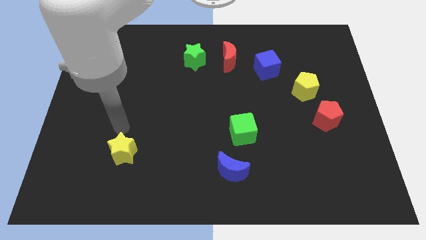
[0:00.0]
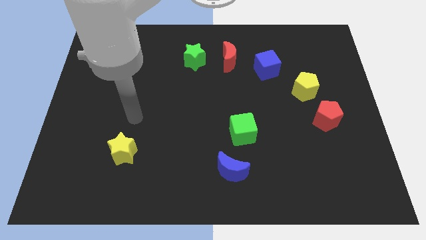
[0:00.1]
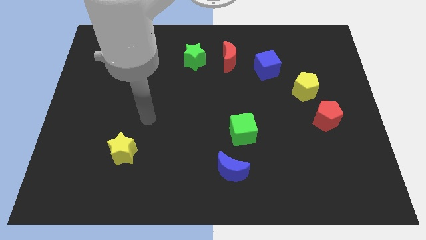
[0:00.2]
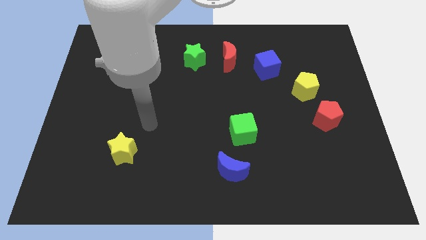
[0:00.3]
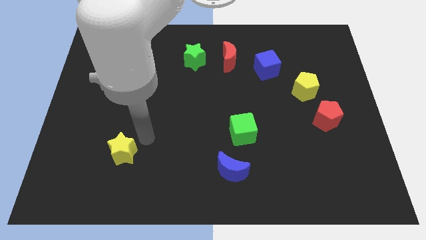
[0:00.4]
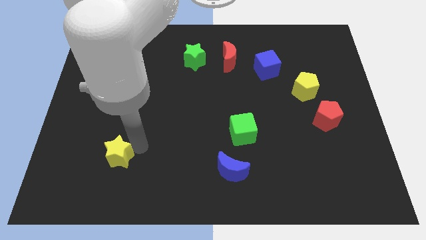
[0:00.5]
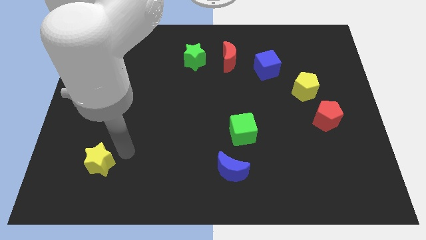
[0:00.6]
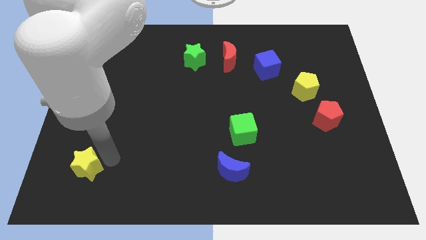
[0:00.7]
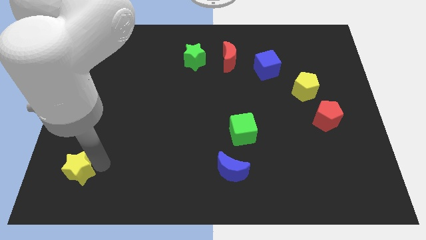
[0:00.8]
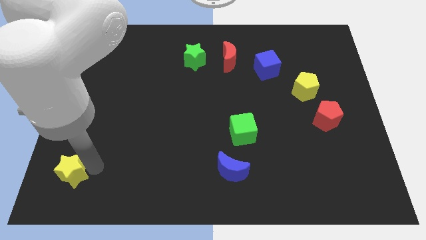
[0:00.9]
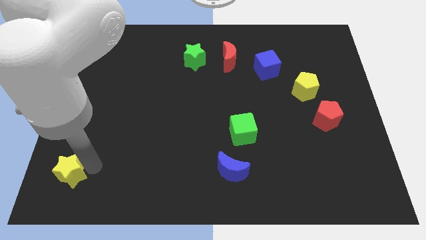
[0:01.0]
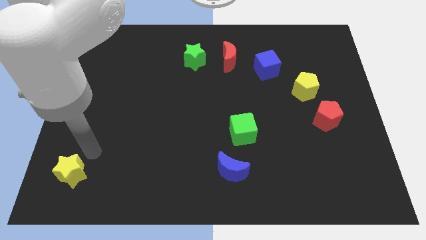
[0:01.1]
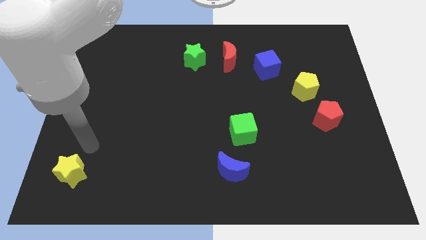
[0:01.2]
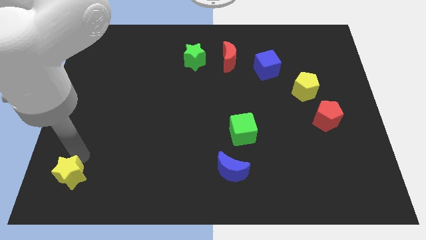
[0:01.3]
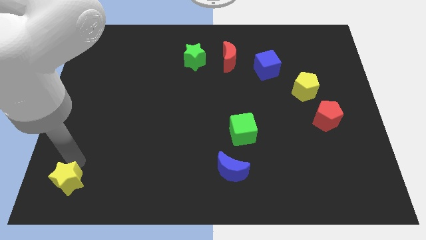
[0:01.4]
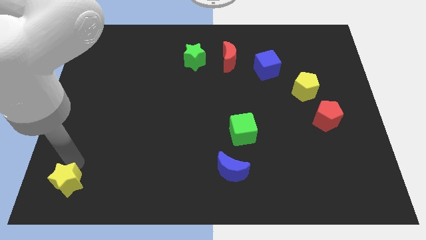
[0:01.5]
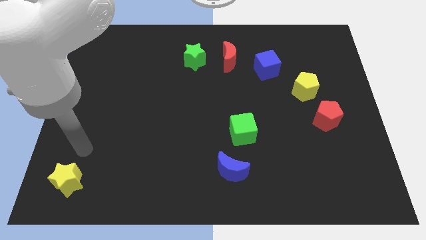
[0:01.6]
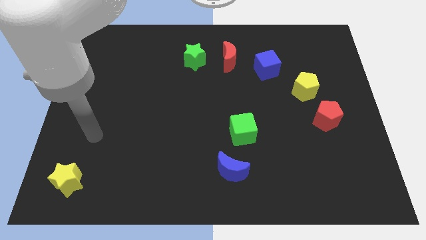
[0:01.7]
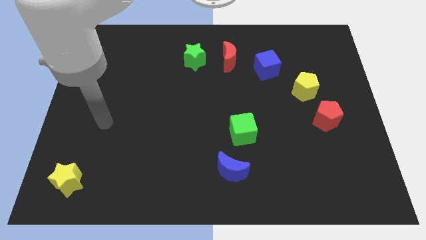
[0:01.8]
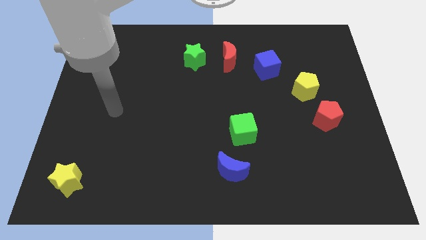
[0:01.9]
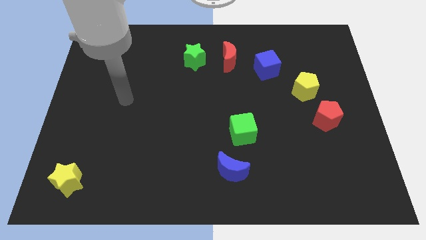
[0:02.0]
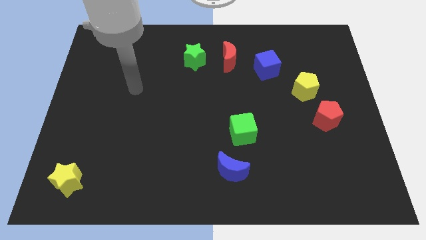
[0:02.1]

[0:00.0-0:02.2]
push yellow star to the left bottom

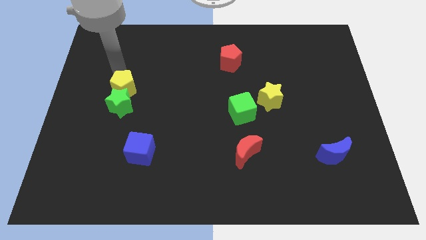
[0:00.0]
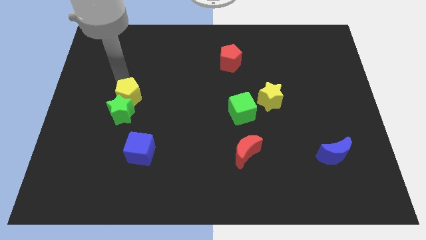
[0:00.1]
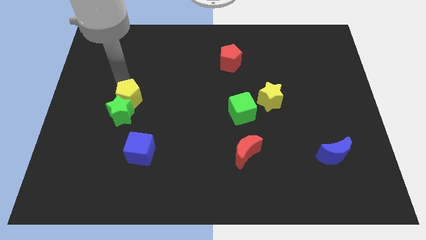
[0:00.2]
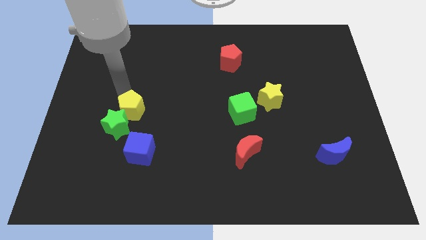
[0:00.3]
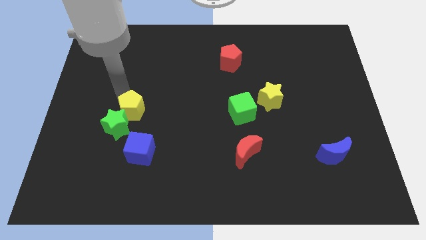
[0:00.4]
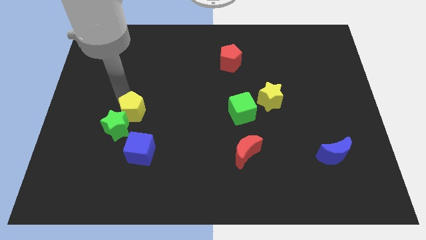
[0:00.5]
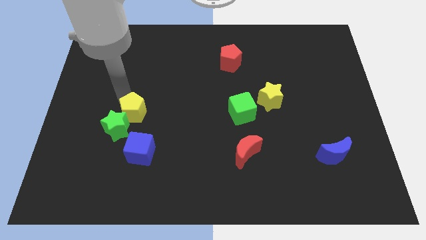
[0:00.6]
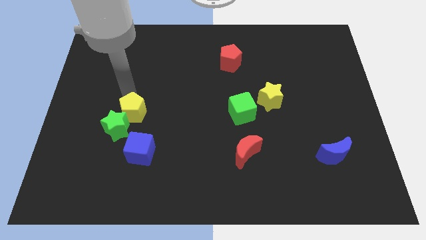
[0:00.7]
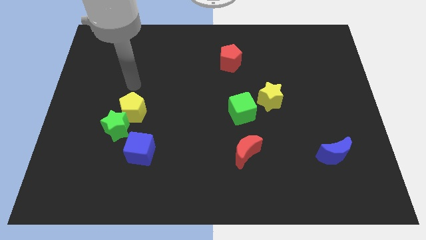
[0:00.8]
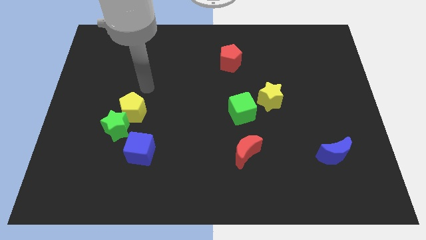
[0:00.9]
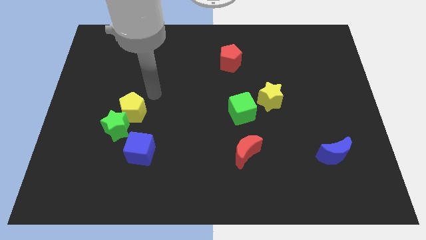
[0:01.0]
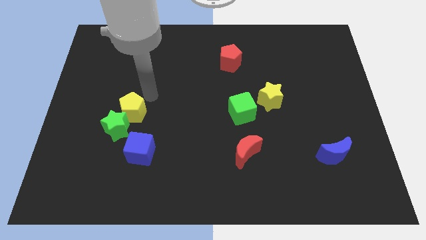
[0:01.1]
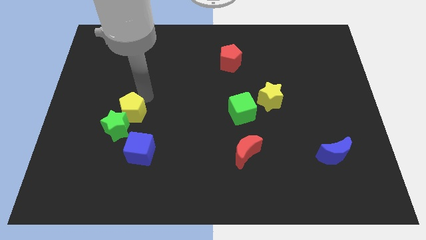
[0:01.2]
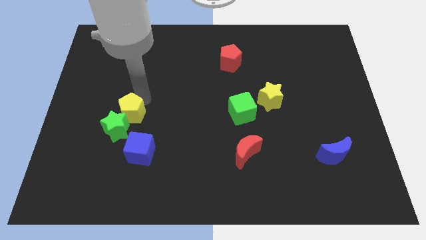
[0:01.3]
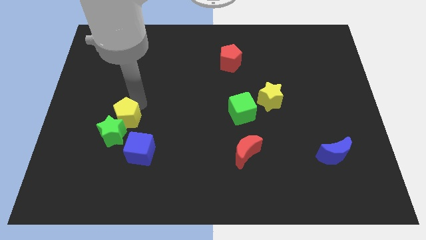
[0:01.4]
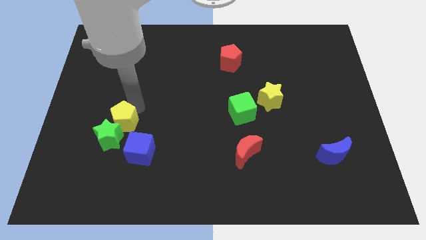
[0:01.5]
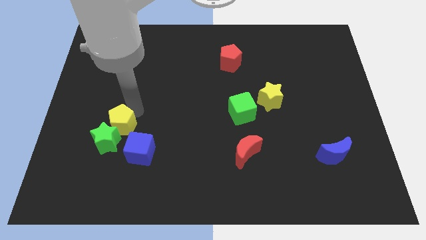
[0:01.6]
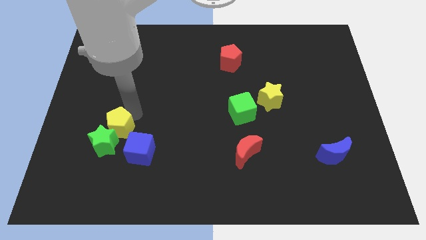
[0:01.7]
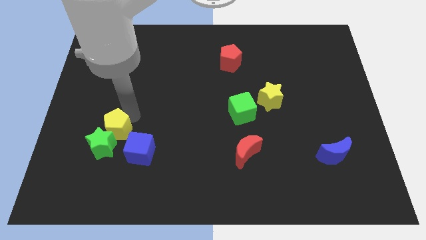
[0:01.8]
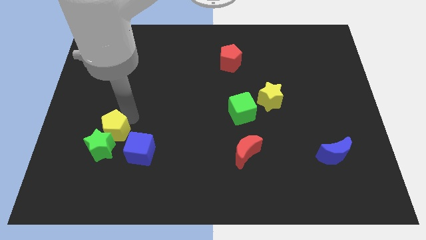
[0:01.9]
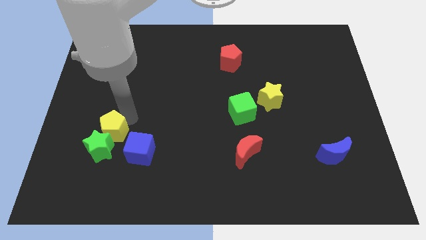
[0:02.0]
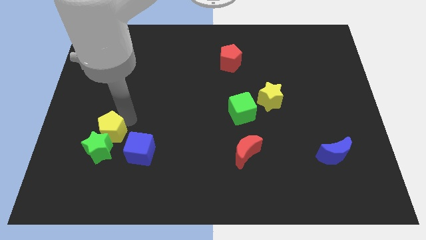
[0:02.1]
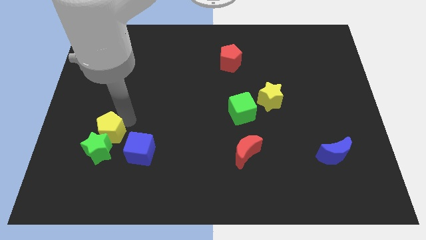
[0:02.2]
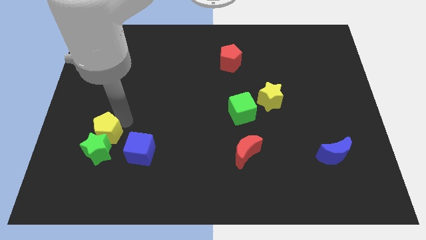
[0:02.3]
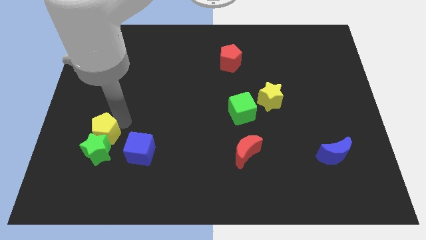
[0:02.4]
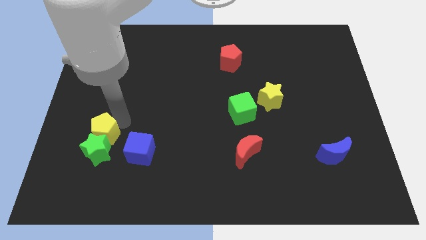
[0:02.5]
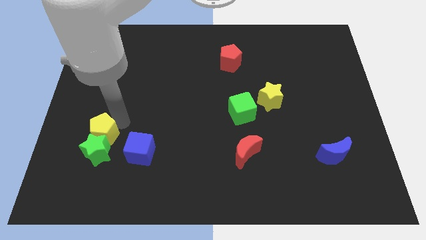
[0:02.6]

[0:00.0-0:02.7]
push the yellow pentagon and the green star together to the left of the blue cube

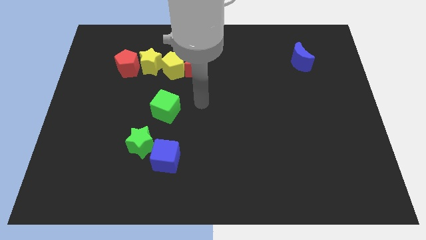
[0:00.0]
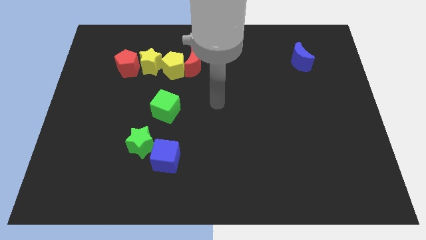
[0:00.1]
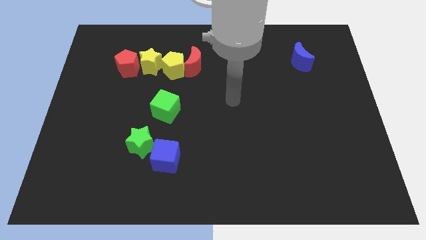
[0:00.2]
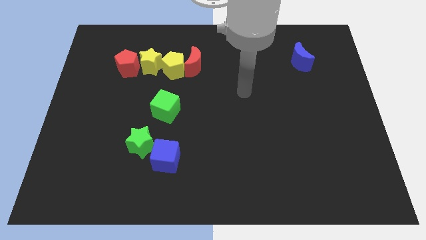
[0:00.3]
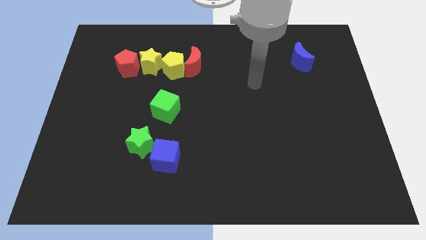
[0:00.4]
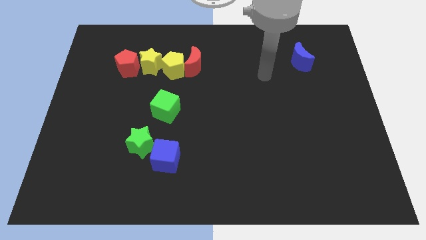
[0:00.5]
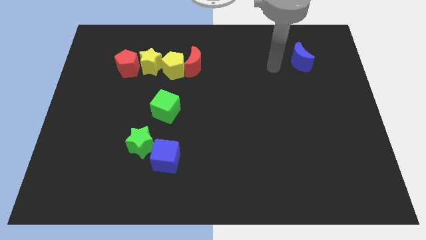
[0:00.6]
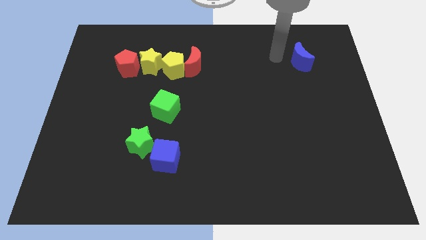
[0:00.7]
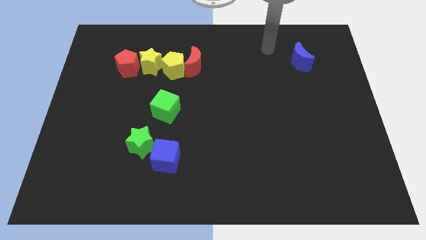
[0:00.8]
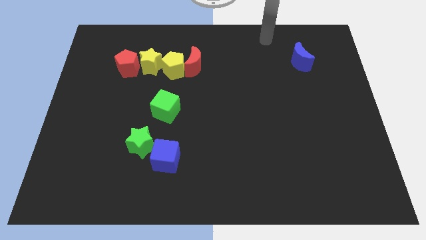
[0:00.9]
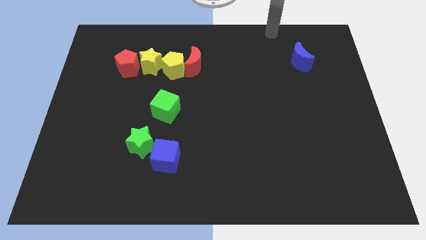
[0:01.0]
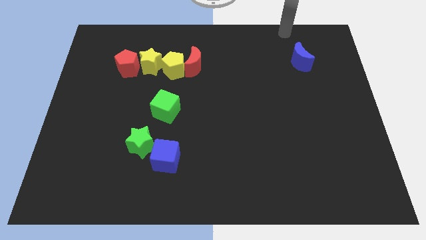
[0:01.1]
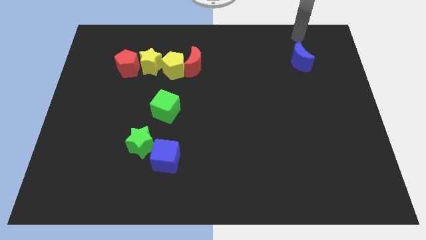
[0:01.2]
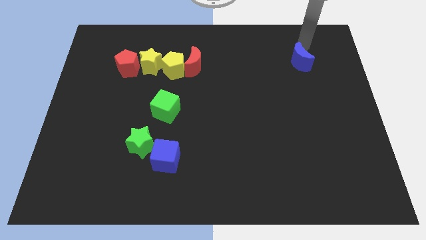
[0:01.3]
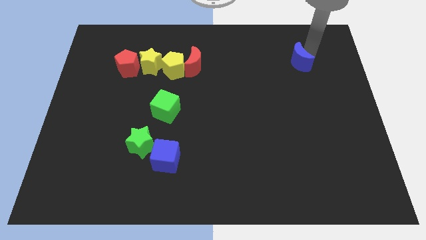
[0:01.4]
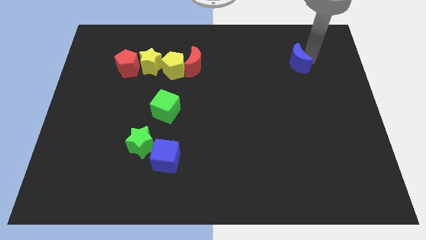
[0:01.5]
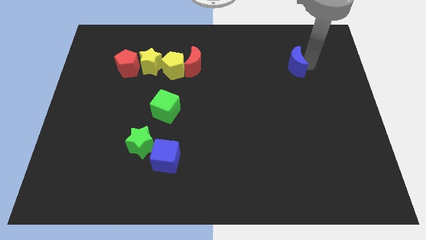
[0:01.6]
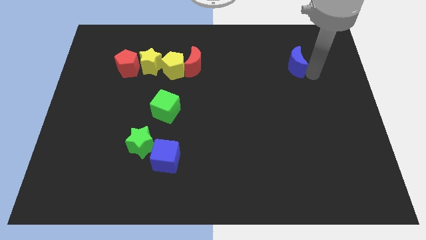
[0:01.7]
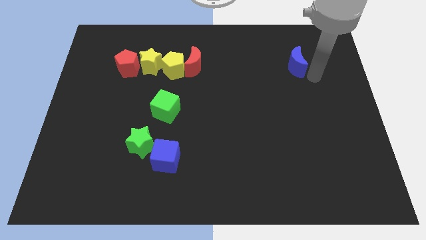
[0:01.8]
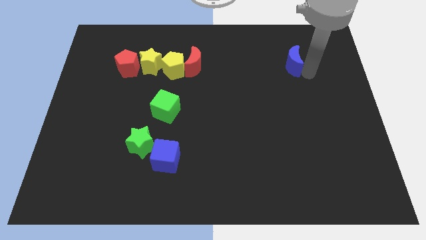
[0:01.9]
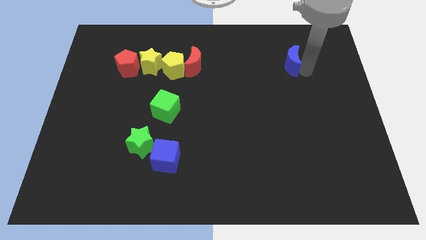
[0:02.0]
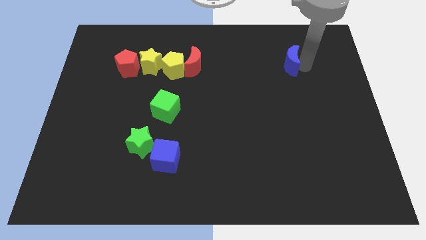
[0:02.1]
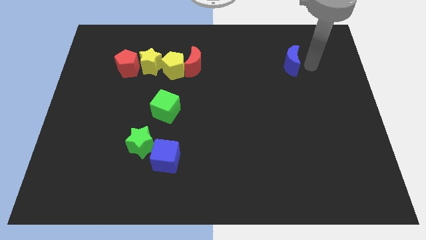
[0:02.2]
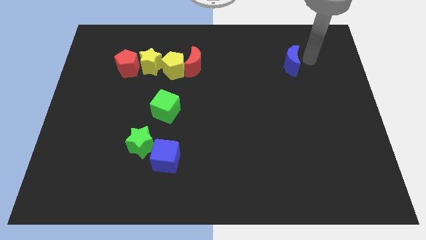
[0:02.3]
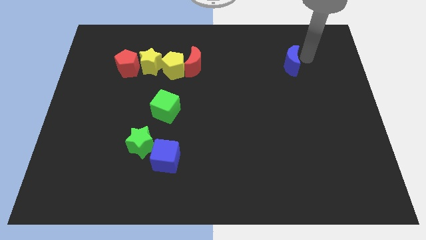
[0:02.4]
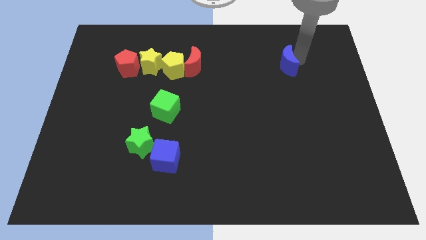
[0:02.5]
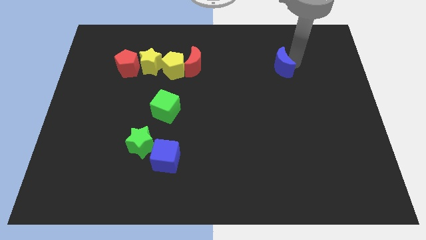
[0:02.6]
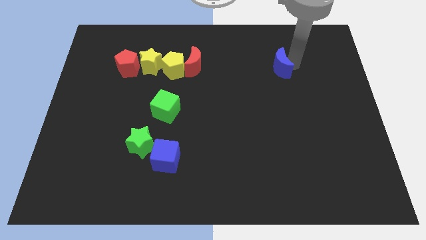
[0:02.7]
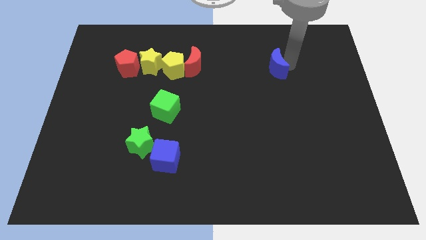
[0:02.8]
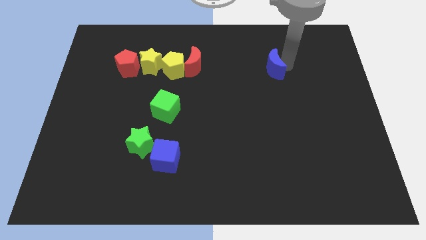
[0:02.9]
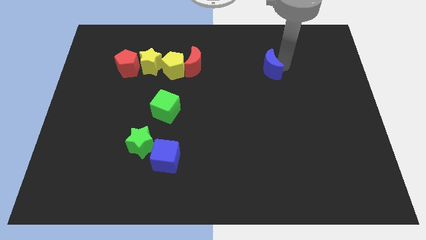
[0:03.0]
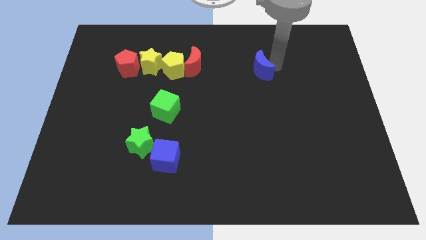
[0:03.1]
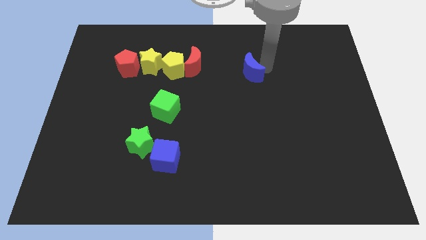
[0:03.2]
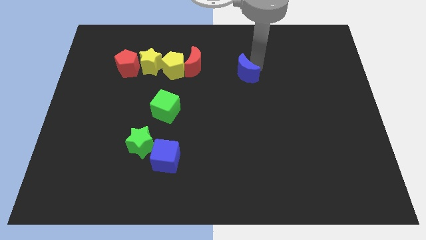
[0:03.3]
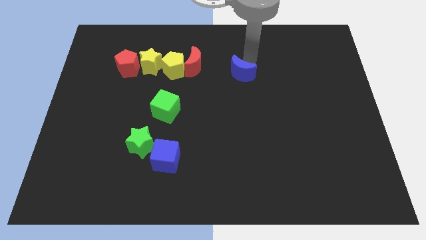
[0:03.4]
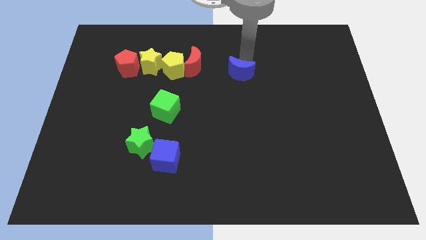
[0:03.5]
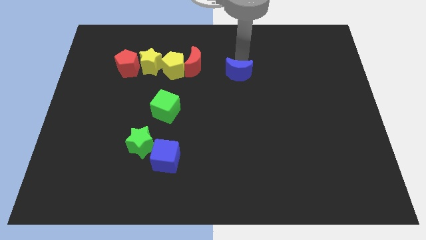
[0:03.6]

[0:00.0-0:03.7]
push the blue crescent towards the red crescent

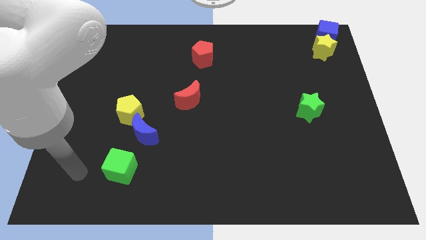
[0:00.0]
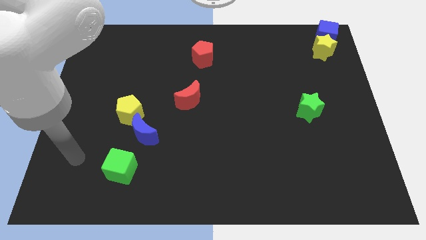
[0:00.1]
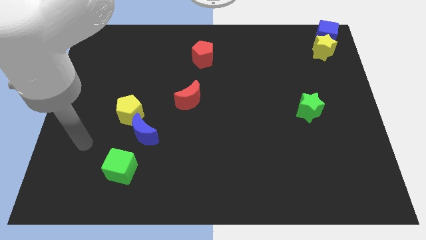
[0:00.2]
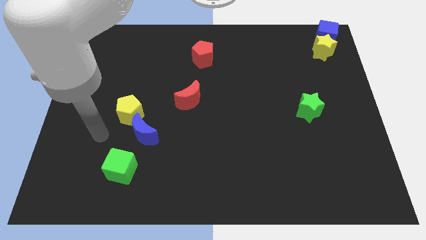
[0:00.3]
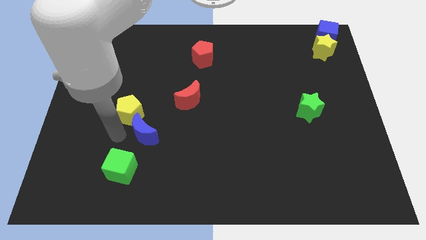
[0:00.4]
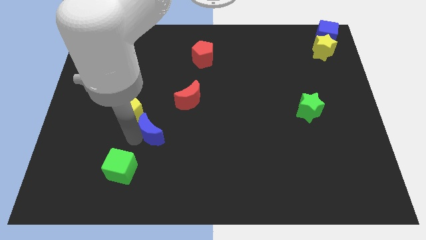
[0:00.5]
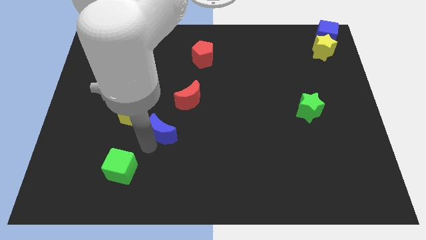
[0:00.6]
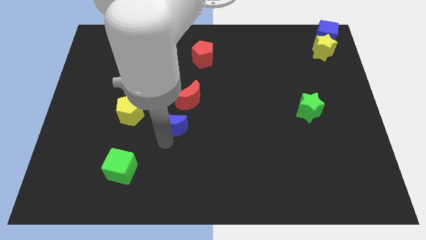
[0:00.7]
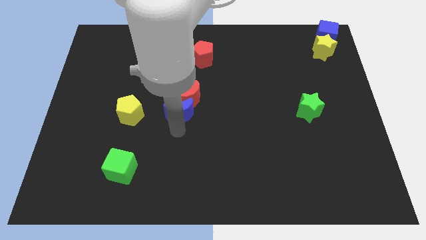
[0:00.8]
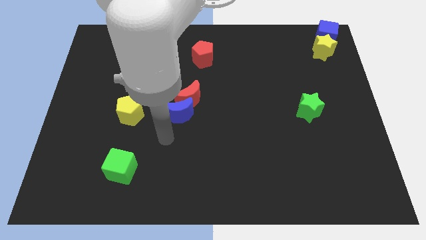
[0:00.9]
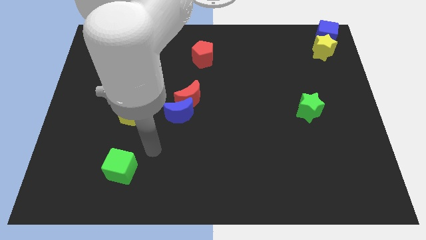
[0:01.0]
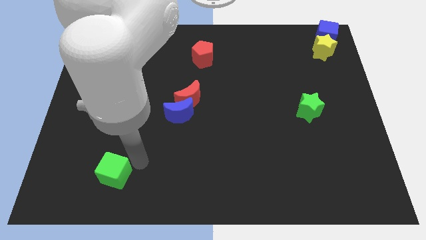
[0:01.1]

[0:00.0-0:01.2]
slide the blue crescent into the red crescent
